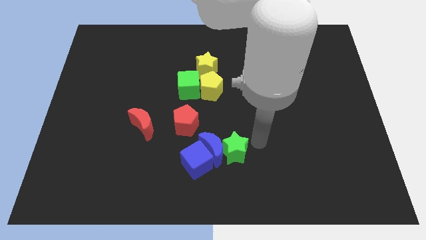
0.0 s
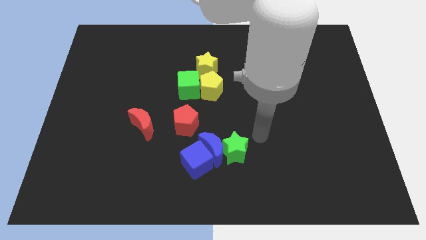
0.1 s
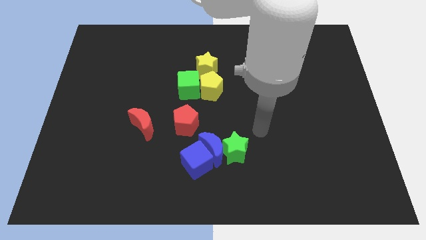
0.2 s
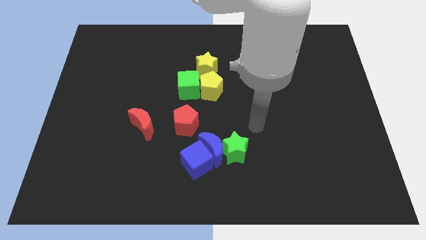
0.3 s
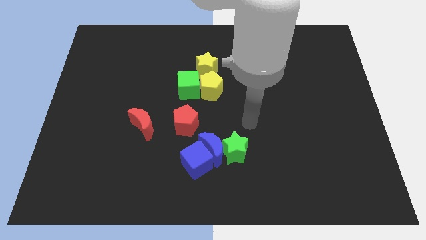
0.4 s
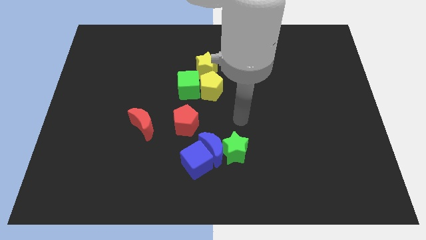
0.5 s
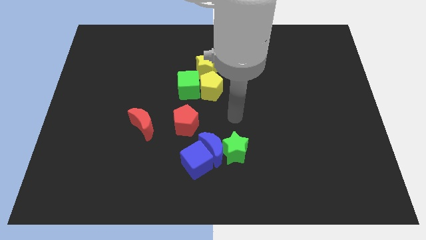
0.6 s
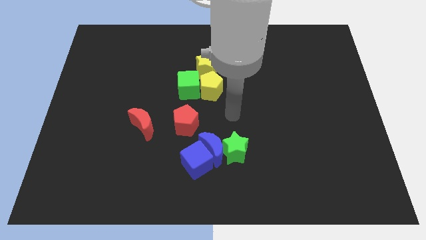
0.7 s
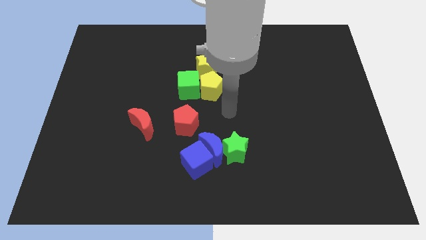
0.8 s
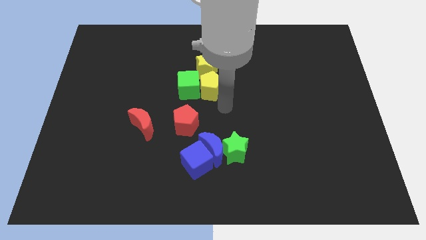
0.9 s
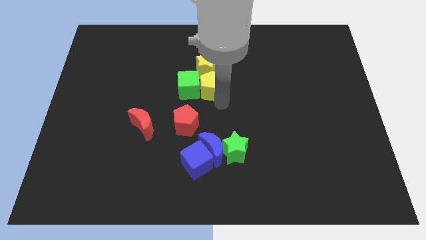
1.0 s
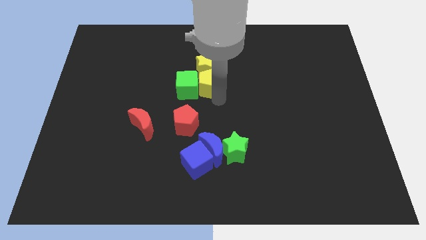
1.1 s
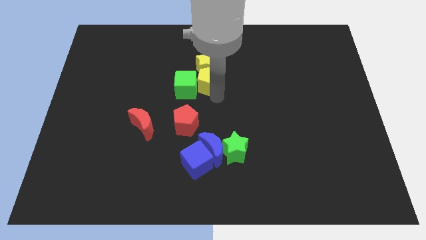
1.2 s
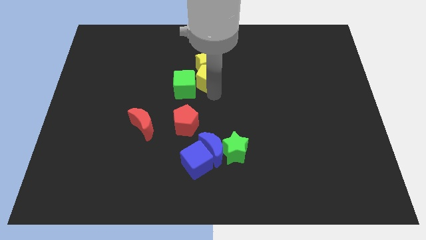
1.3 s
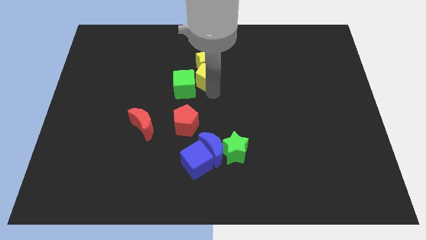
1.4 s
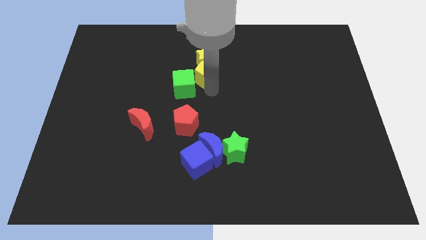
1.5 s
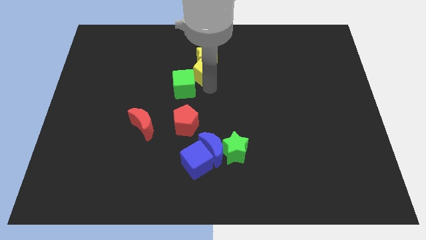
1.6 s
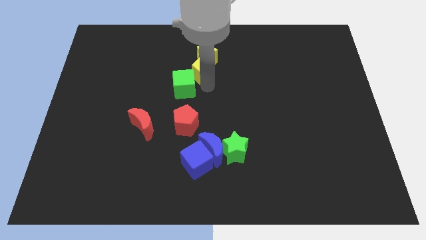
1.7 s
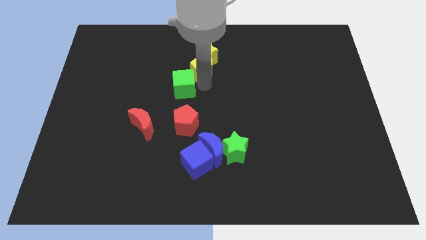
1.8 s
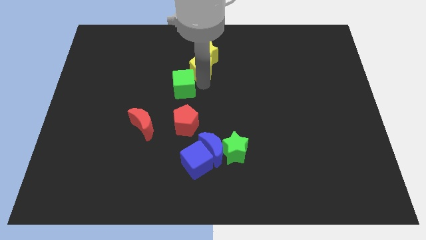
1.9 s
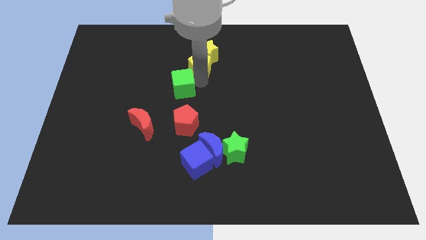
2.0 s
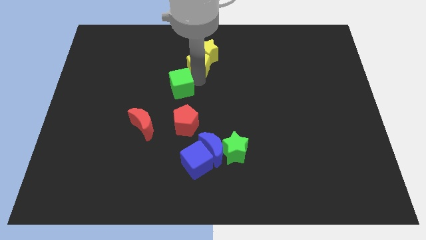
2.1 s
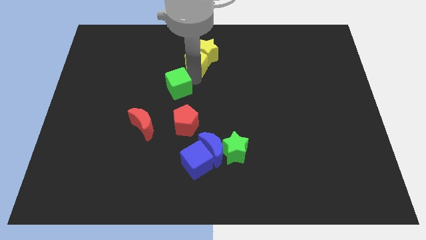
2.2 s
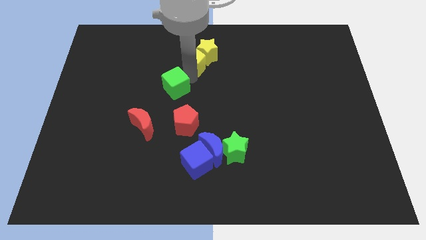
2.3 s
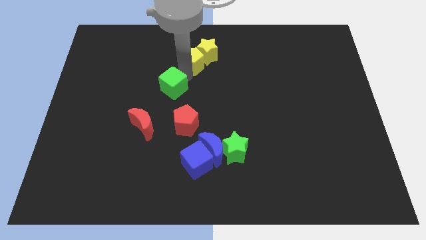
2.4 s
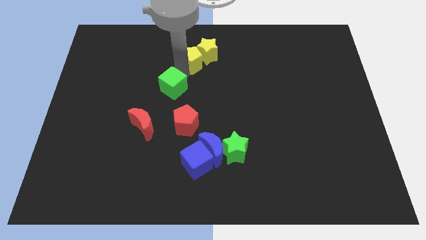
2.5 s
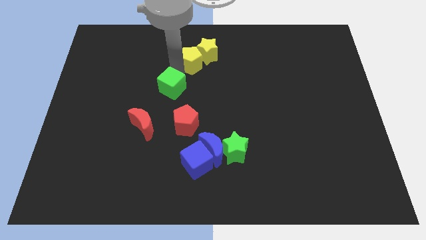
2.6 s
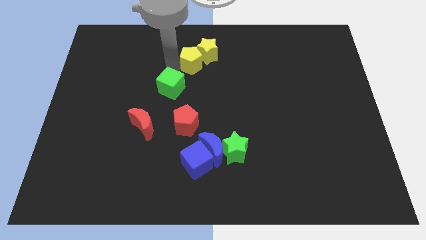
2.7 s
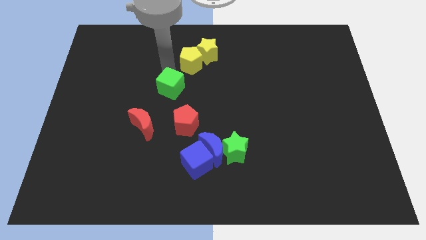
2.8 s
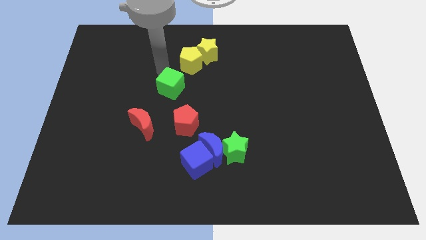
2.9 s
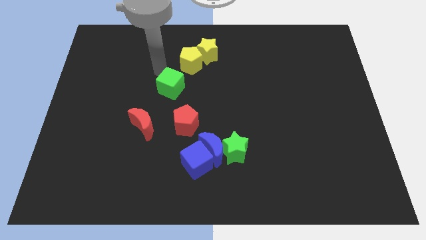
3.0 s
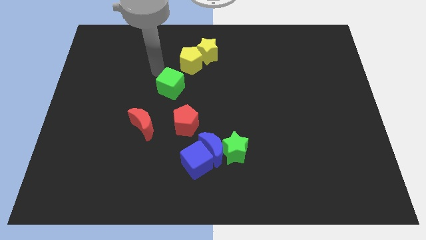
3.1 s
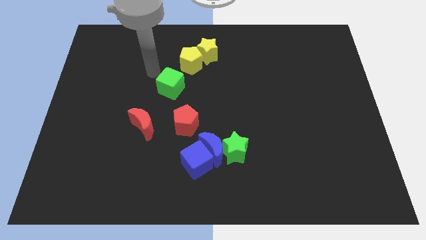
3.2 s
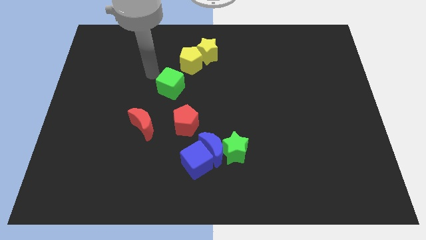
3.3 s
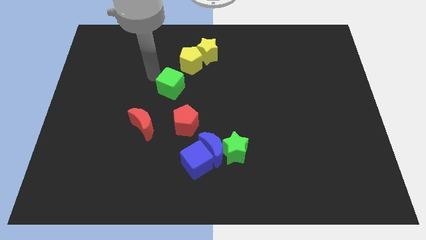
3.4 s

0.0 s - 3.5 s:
place the yellow pentagon in between green cube and yellow star

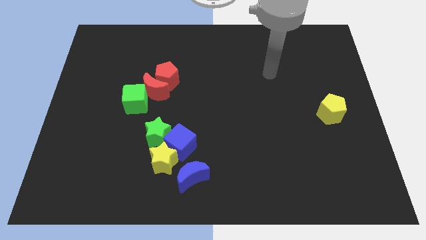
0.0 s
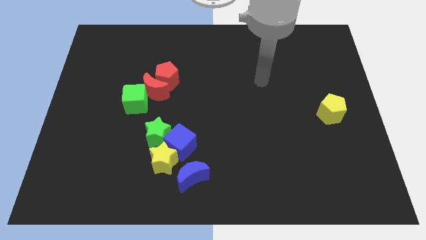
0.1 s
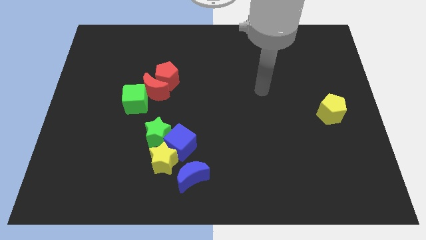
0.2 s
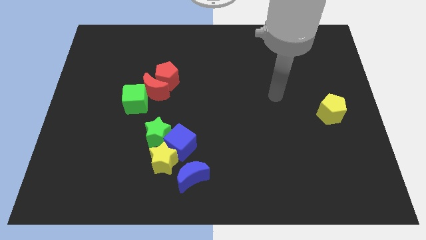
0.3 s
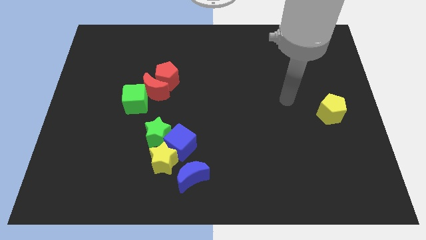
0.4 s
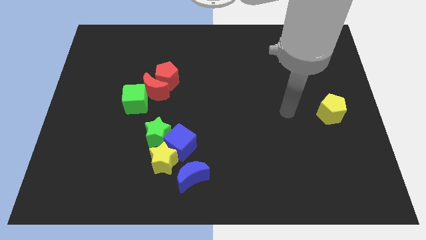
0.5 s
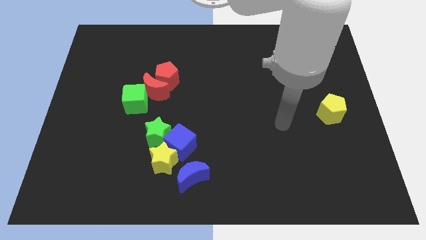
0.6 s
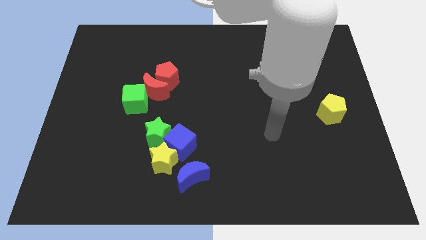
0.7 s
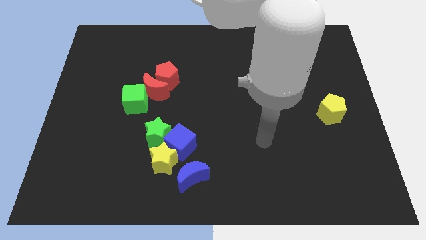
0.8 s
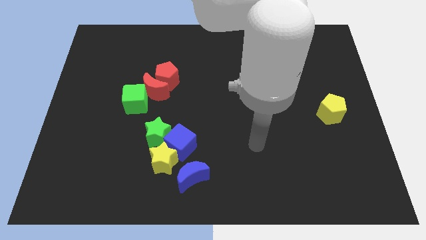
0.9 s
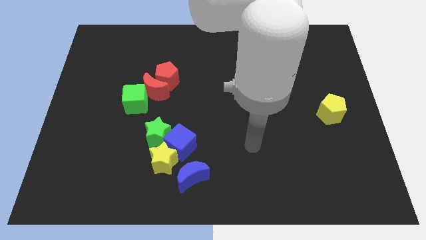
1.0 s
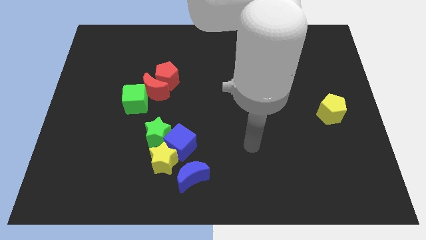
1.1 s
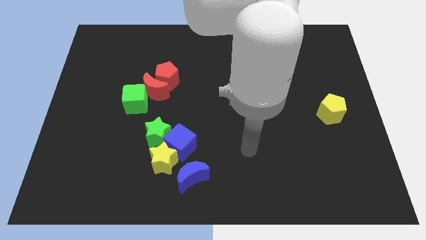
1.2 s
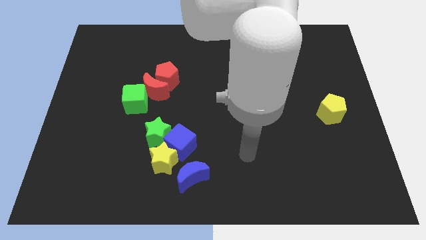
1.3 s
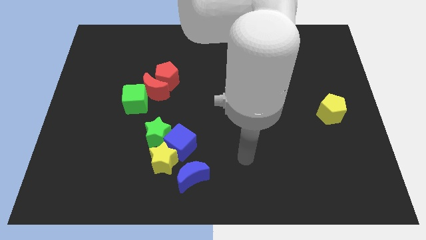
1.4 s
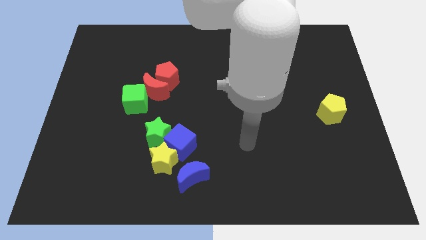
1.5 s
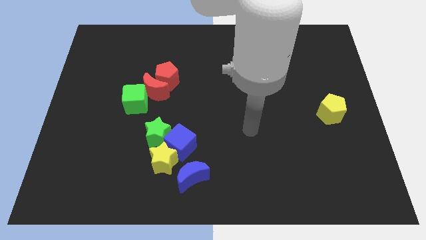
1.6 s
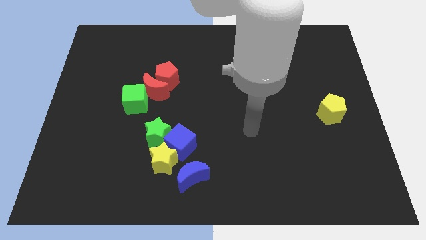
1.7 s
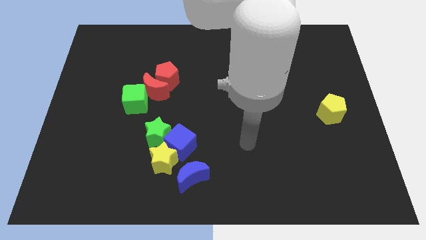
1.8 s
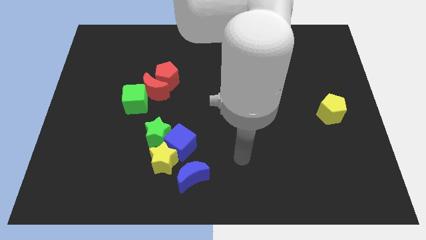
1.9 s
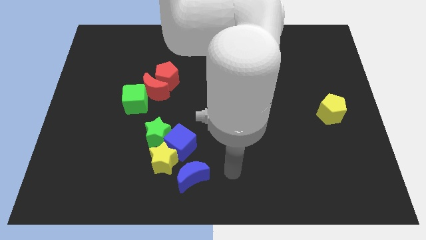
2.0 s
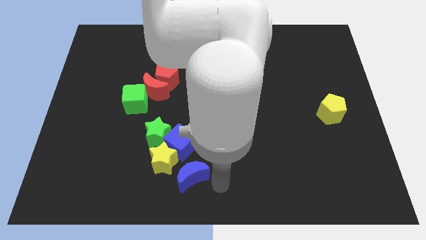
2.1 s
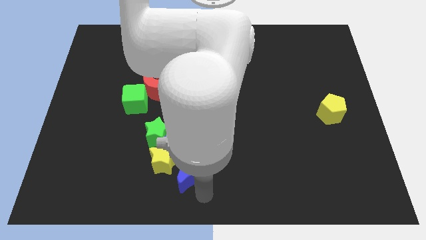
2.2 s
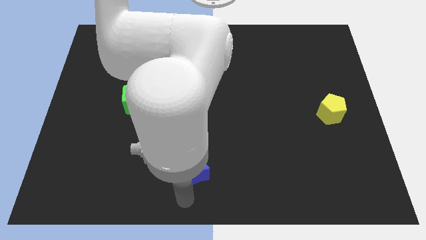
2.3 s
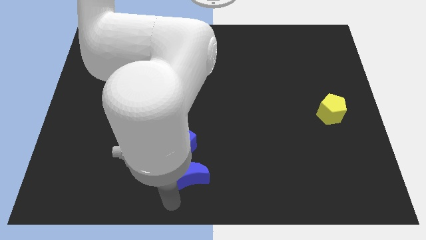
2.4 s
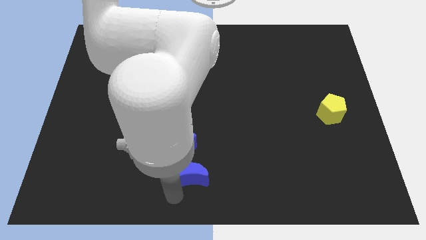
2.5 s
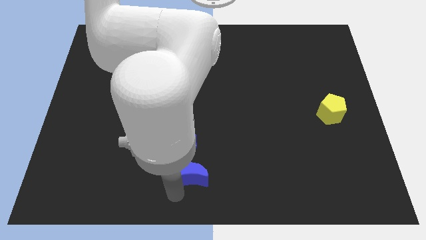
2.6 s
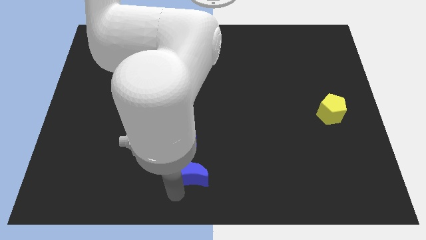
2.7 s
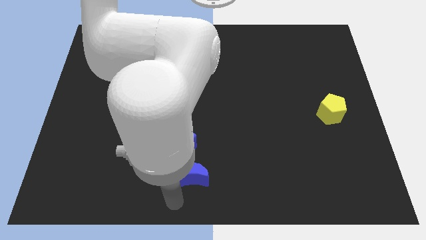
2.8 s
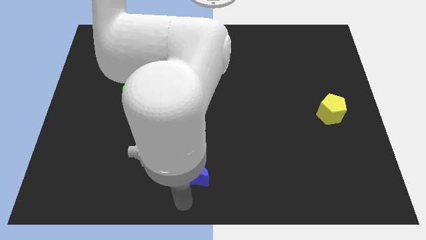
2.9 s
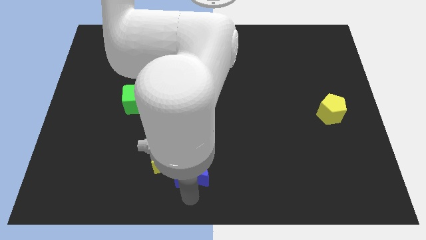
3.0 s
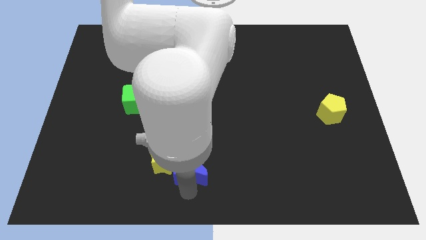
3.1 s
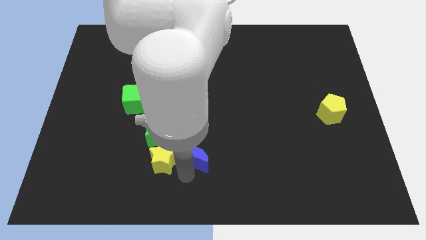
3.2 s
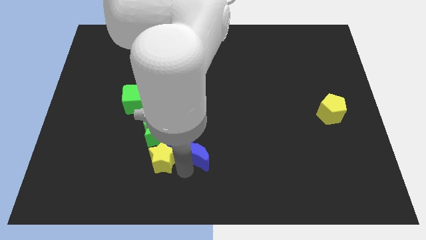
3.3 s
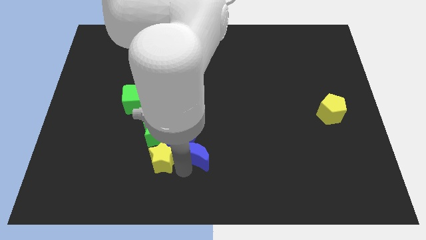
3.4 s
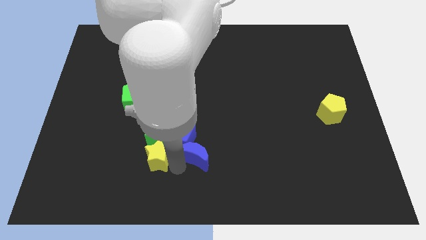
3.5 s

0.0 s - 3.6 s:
push the blue crescent into the blue cube

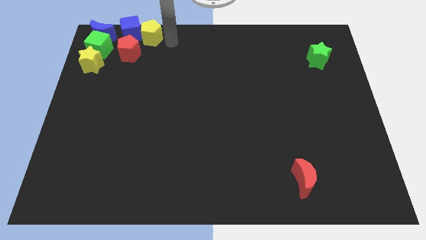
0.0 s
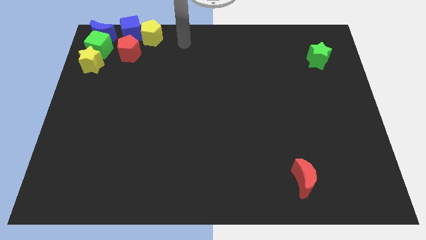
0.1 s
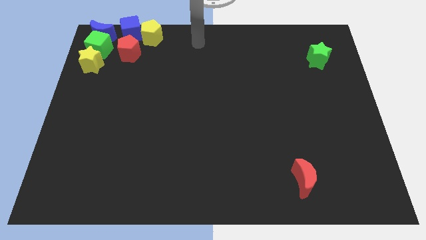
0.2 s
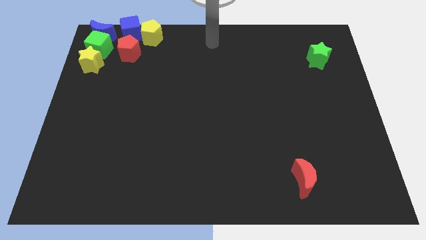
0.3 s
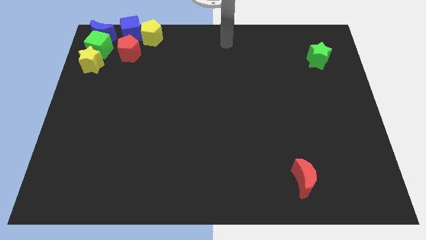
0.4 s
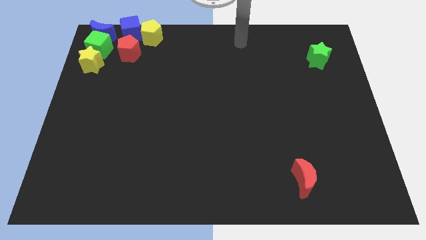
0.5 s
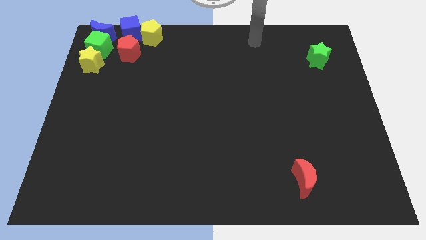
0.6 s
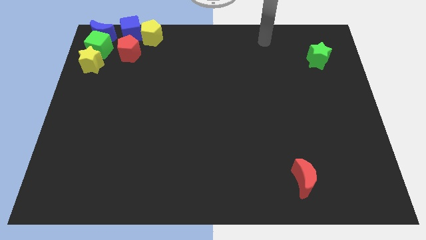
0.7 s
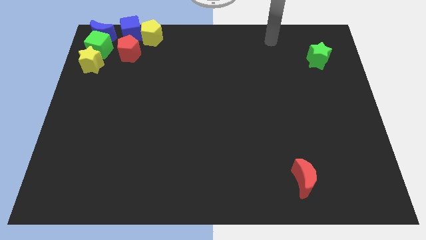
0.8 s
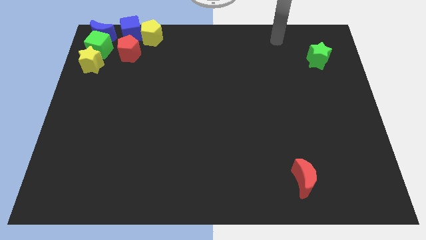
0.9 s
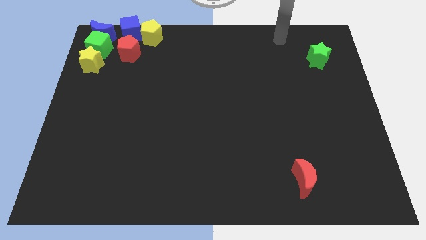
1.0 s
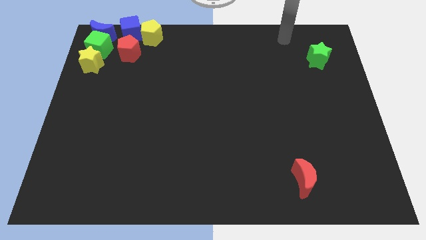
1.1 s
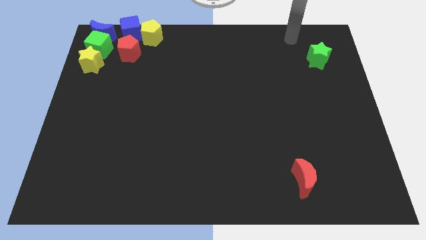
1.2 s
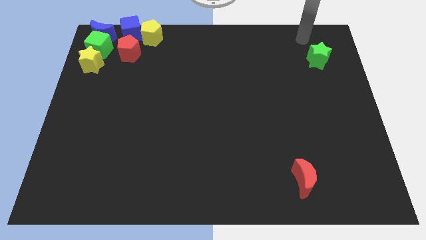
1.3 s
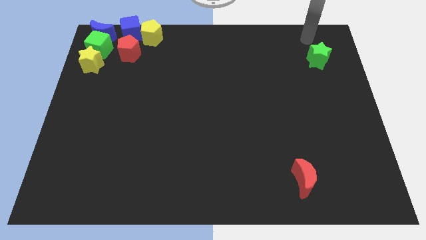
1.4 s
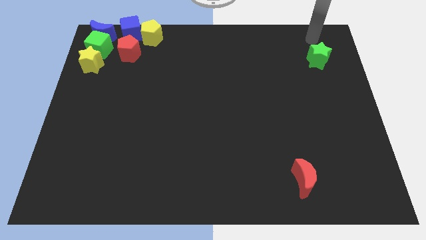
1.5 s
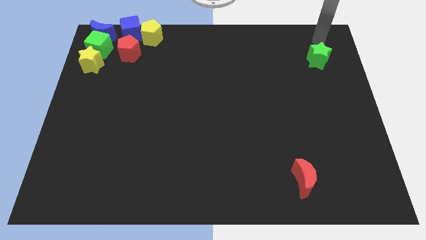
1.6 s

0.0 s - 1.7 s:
move your arm away from yellow pentagon

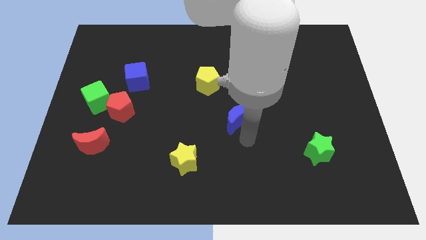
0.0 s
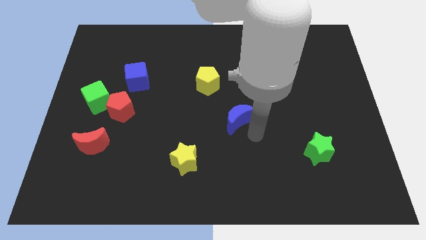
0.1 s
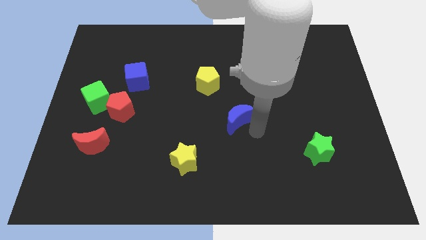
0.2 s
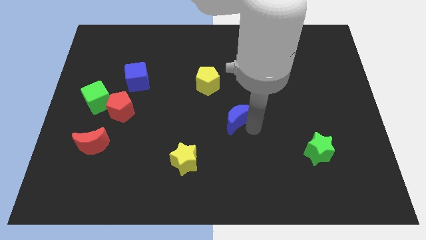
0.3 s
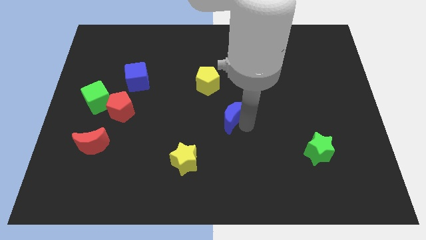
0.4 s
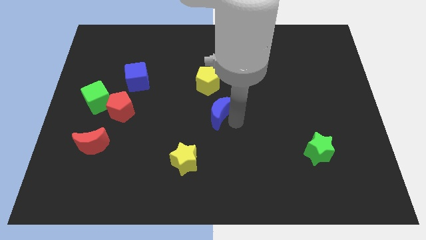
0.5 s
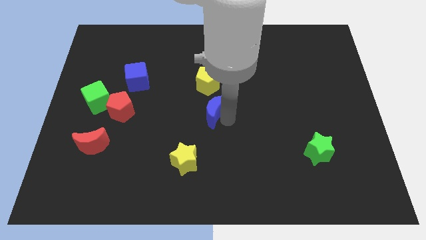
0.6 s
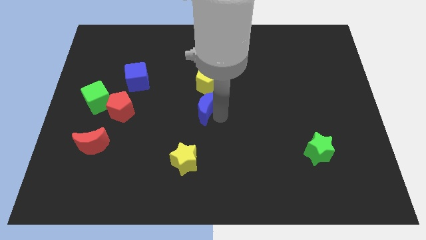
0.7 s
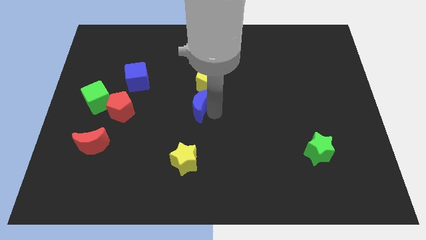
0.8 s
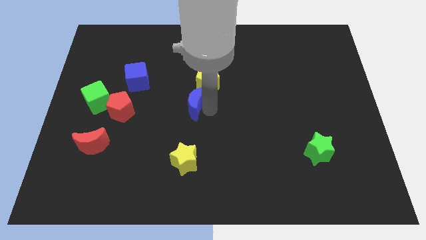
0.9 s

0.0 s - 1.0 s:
move the blue crescent below the yellow pentagon
